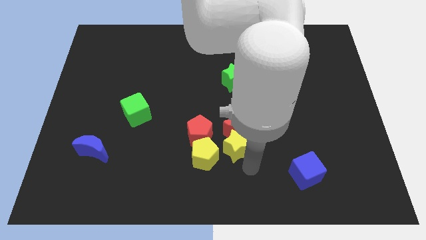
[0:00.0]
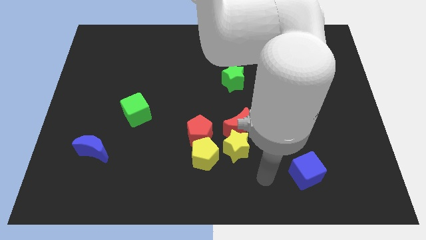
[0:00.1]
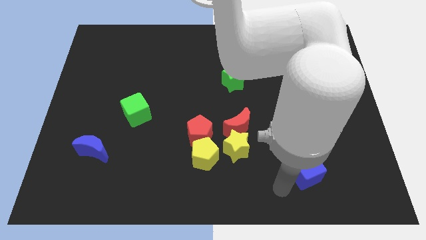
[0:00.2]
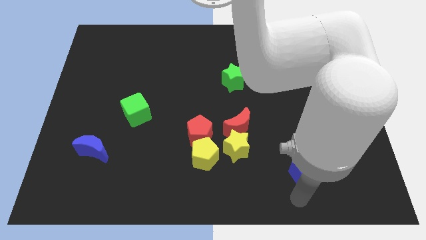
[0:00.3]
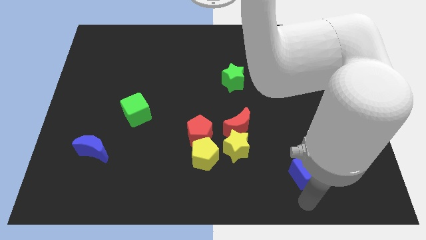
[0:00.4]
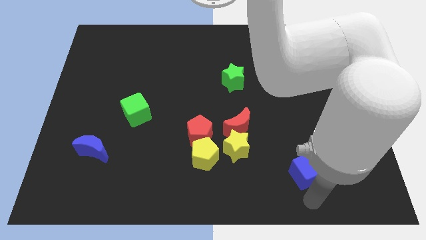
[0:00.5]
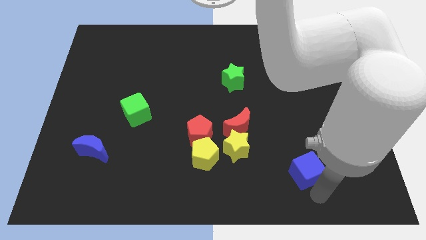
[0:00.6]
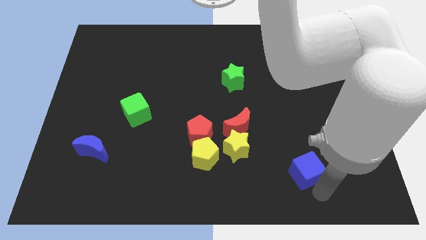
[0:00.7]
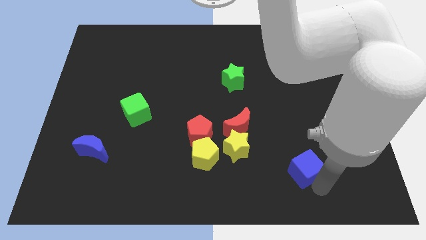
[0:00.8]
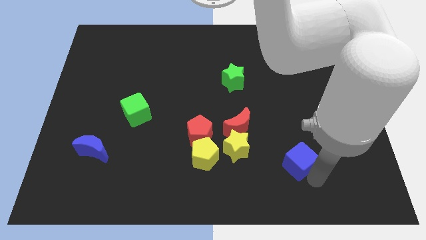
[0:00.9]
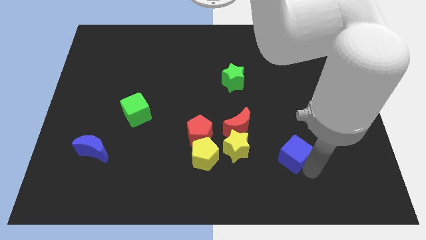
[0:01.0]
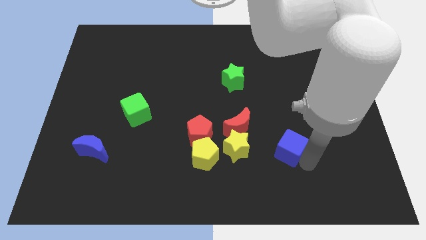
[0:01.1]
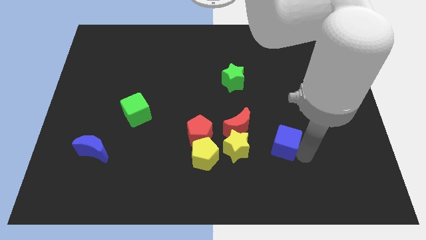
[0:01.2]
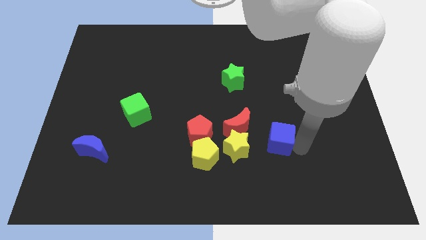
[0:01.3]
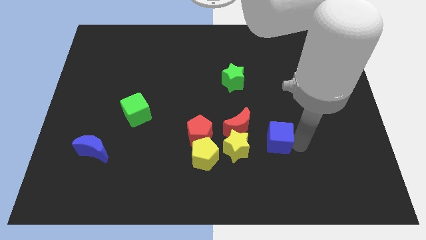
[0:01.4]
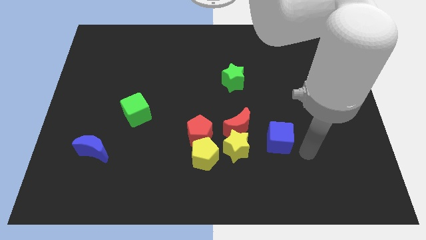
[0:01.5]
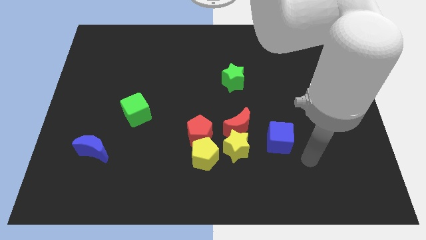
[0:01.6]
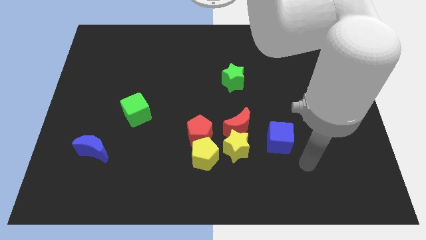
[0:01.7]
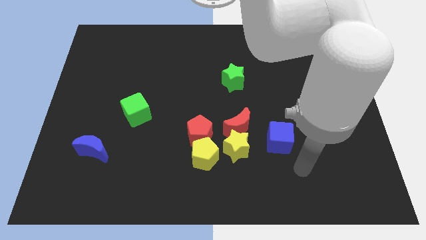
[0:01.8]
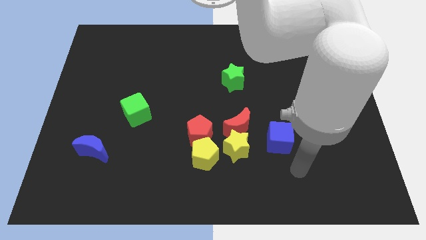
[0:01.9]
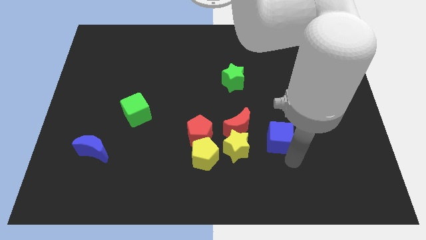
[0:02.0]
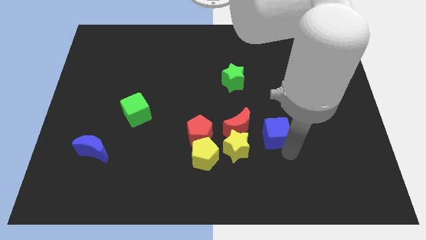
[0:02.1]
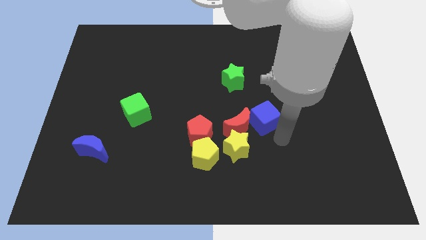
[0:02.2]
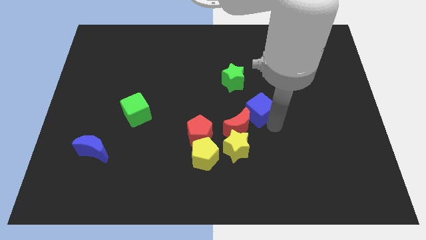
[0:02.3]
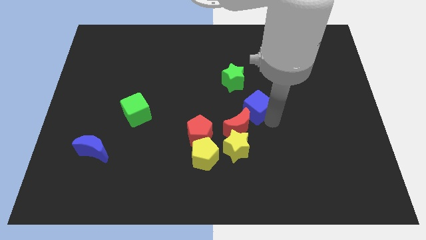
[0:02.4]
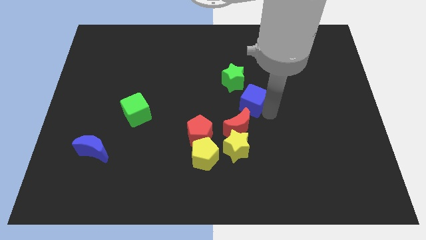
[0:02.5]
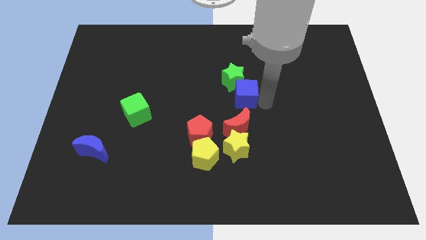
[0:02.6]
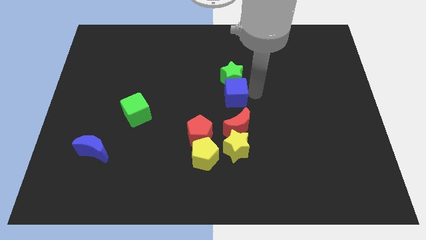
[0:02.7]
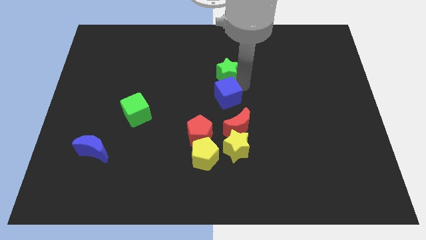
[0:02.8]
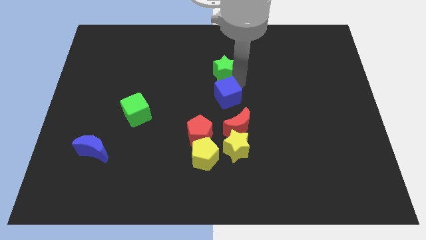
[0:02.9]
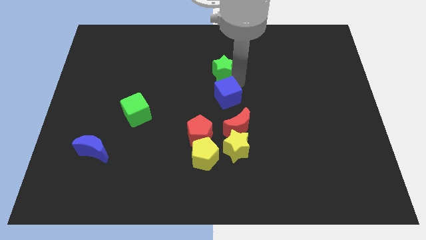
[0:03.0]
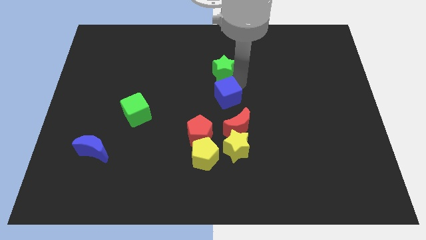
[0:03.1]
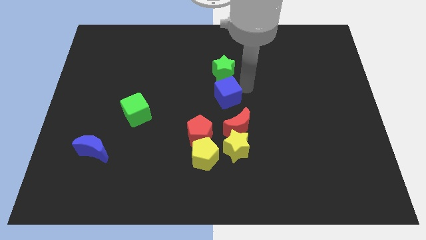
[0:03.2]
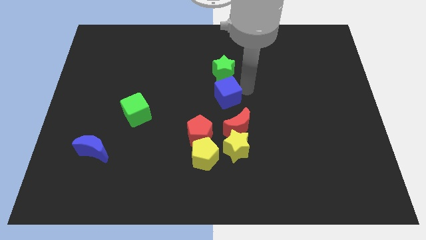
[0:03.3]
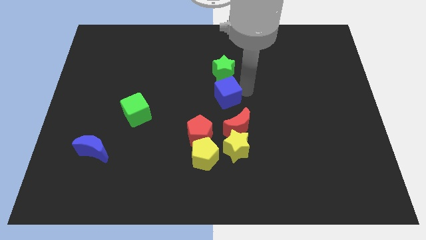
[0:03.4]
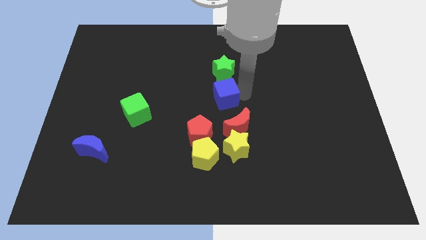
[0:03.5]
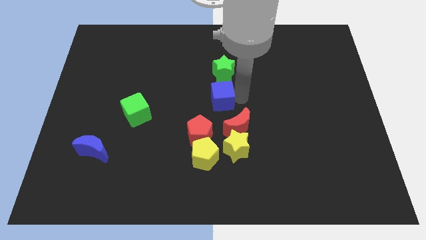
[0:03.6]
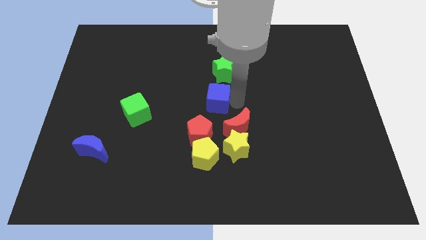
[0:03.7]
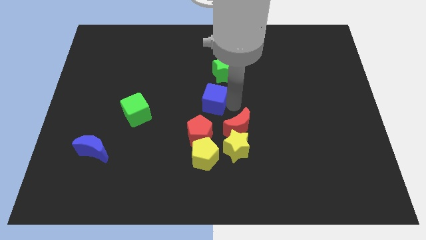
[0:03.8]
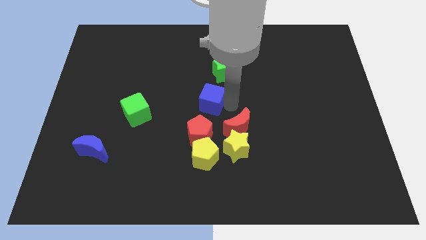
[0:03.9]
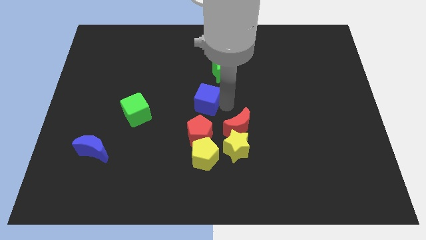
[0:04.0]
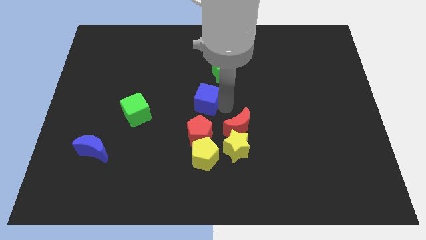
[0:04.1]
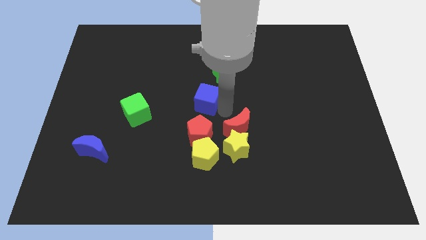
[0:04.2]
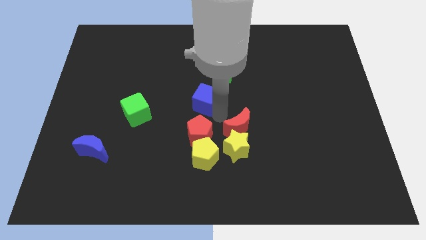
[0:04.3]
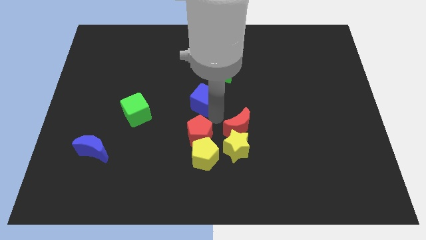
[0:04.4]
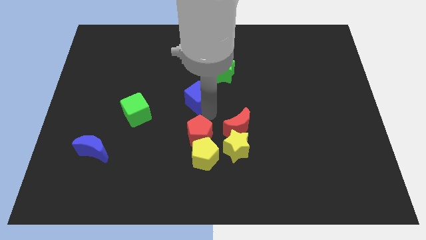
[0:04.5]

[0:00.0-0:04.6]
put the blue cube at the top side of the red pentagon

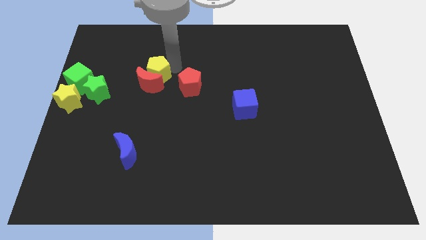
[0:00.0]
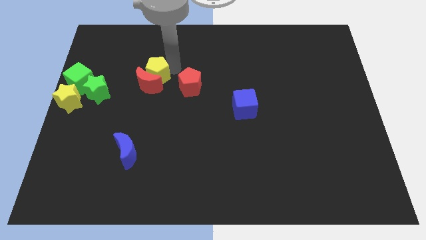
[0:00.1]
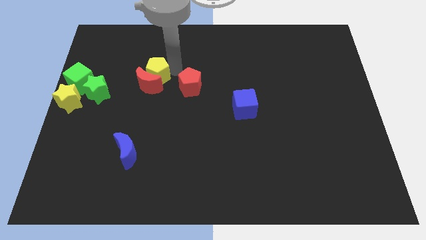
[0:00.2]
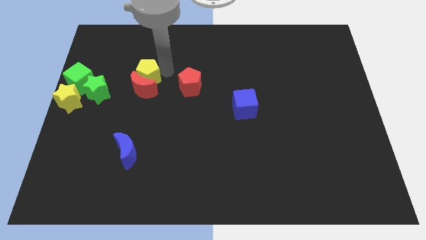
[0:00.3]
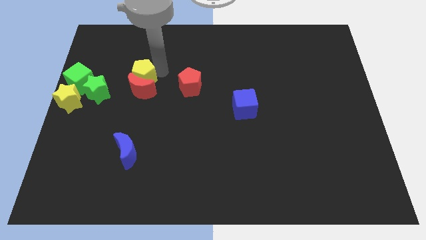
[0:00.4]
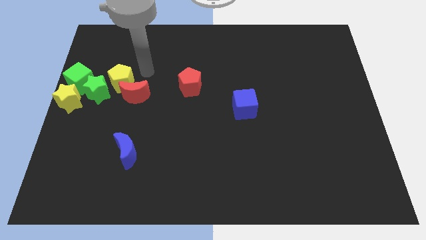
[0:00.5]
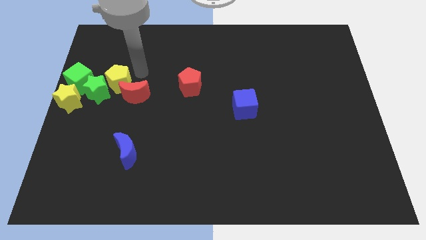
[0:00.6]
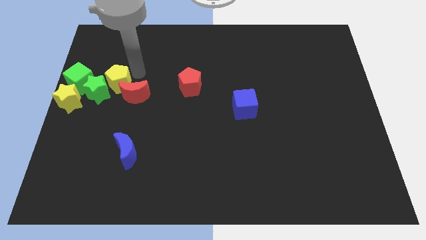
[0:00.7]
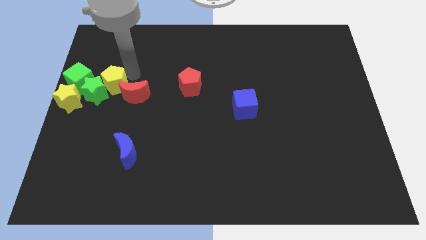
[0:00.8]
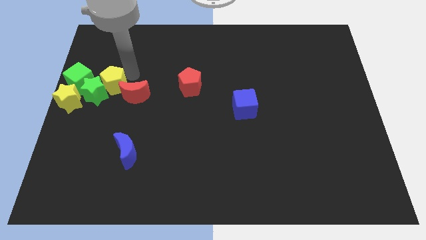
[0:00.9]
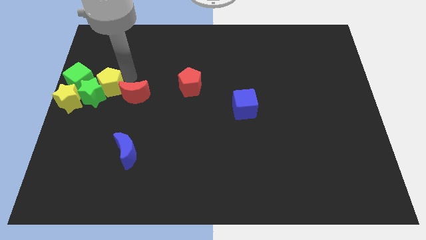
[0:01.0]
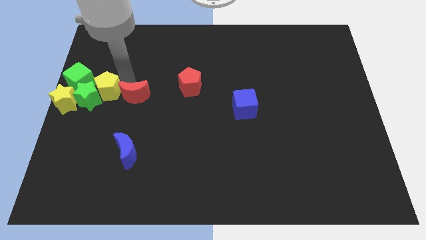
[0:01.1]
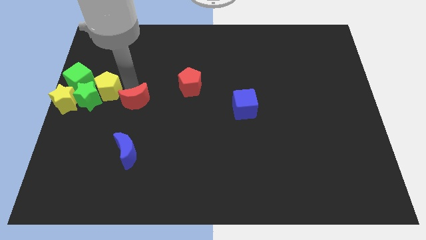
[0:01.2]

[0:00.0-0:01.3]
move the yellow pentagon along with the red crescent to the left center of the board

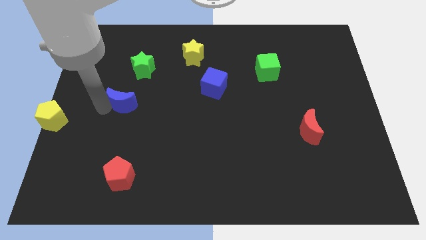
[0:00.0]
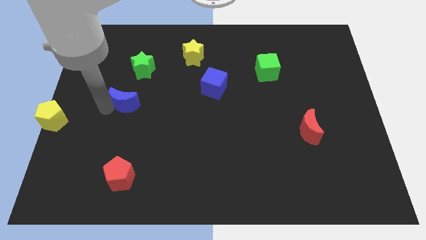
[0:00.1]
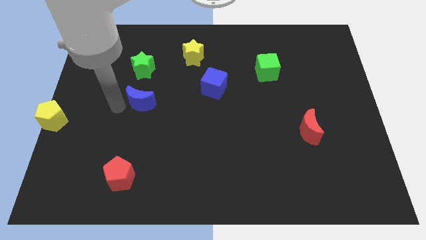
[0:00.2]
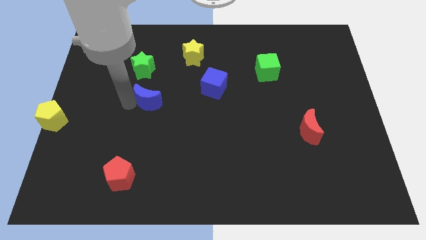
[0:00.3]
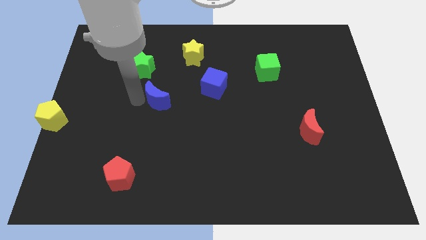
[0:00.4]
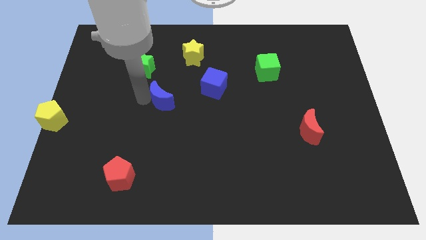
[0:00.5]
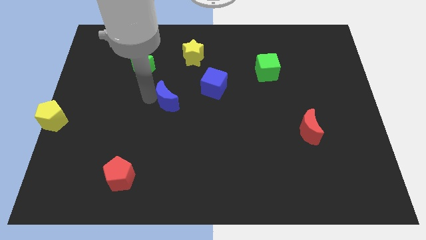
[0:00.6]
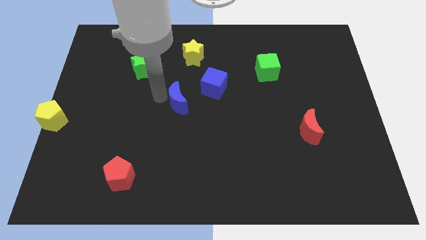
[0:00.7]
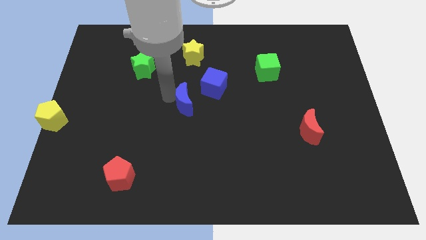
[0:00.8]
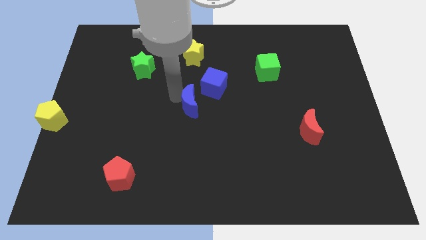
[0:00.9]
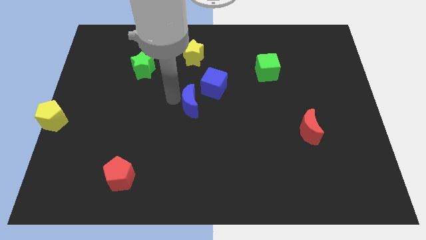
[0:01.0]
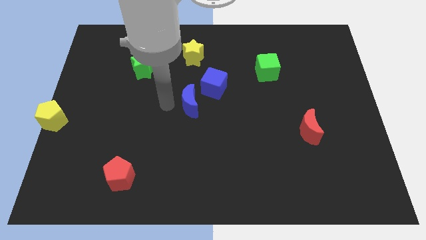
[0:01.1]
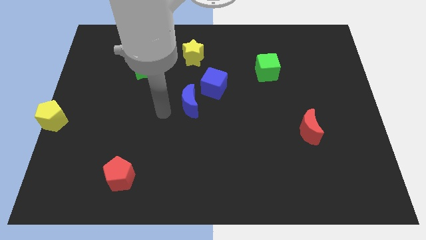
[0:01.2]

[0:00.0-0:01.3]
move the blue crescent to the right

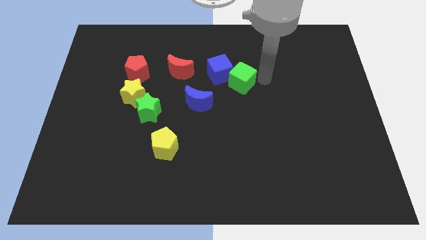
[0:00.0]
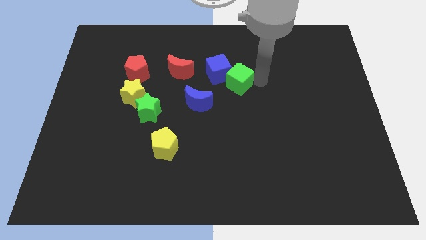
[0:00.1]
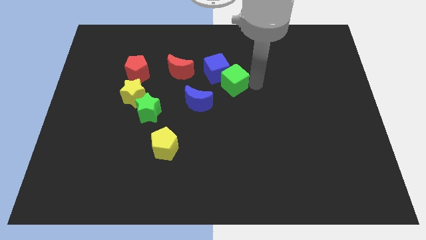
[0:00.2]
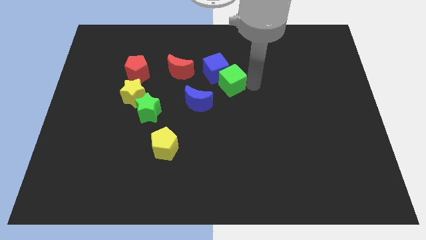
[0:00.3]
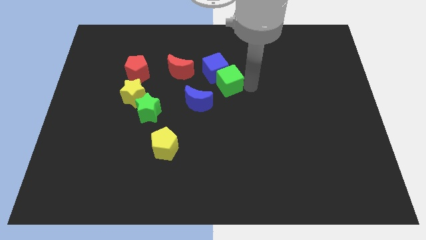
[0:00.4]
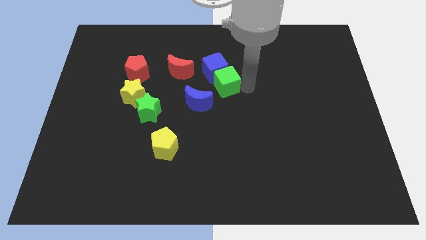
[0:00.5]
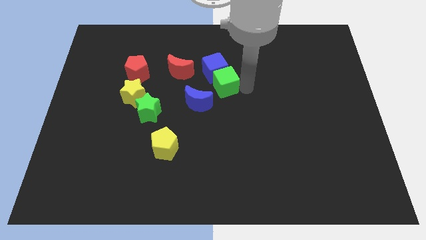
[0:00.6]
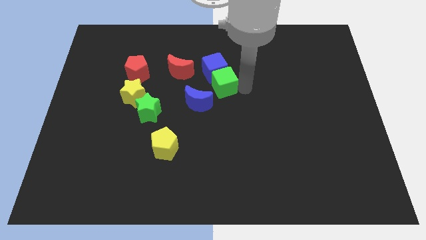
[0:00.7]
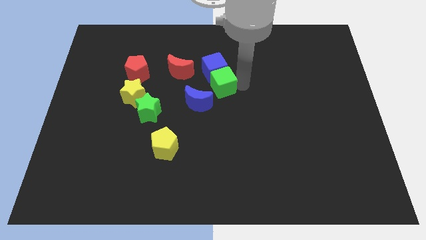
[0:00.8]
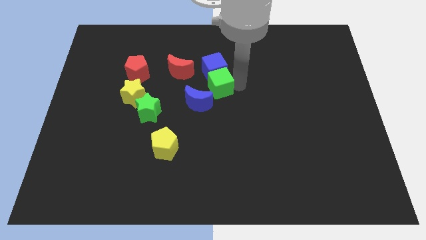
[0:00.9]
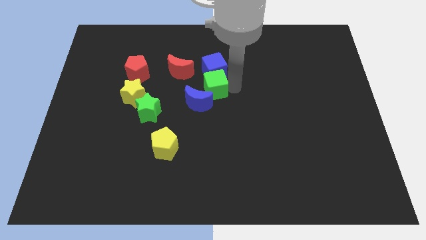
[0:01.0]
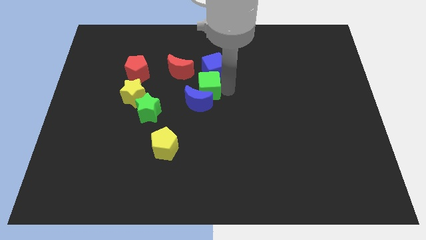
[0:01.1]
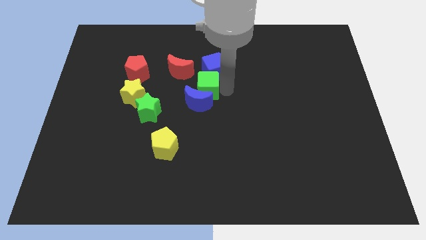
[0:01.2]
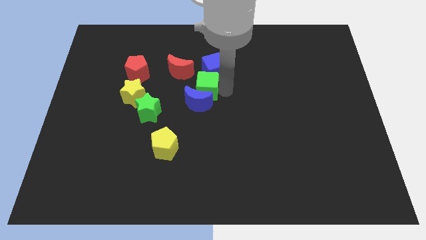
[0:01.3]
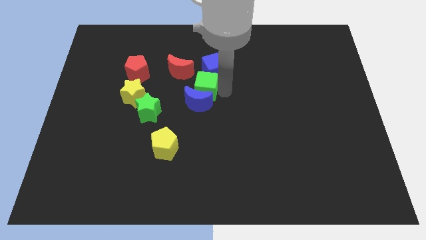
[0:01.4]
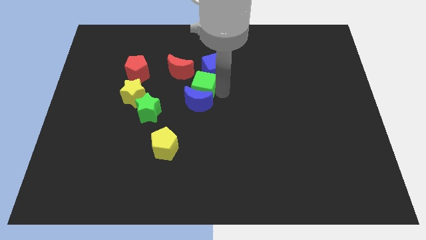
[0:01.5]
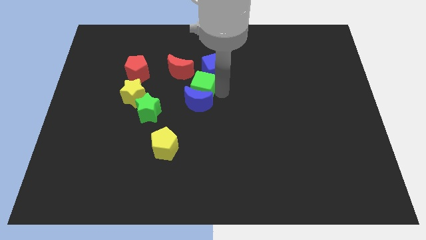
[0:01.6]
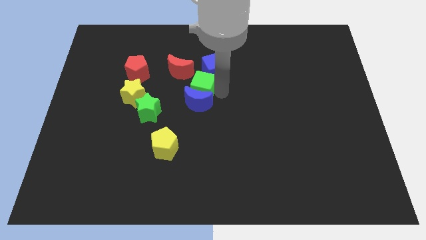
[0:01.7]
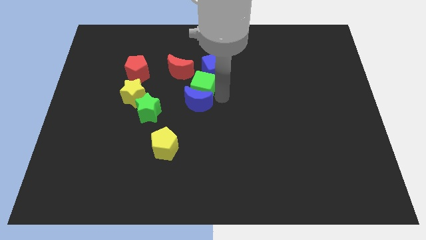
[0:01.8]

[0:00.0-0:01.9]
move the green cube below the blue cube
